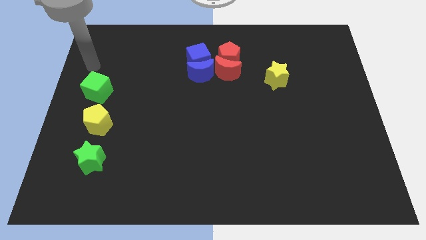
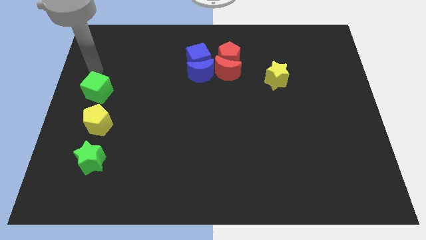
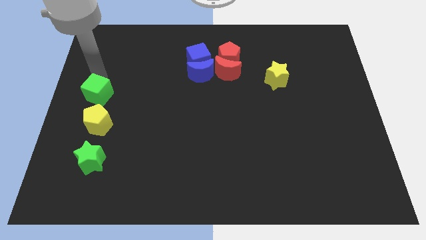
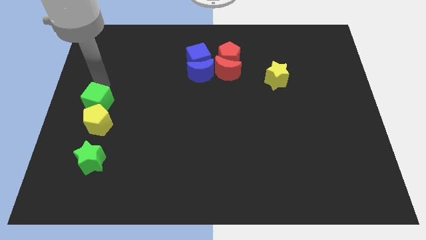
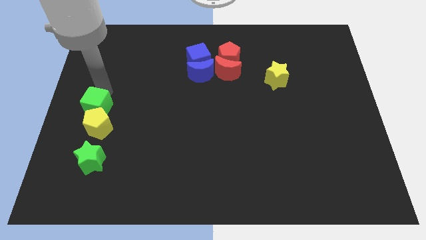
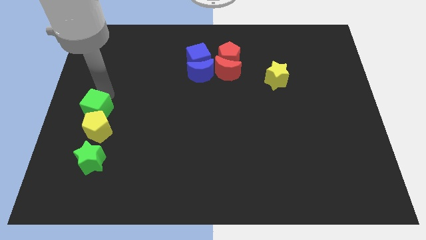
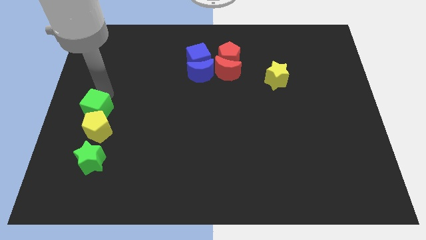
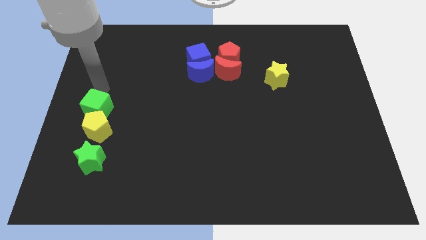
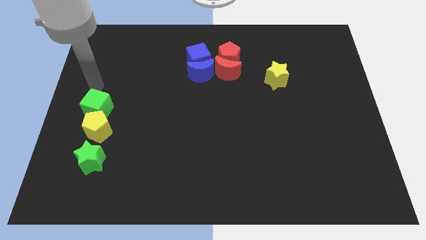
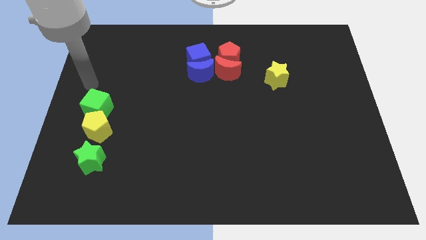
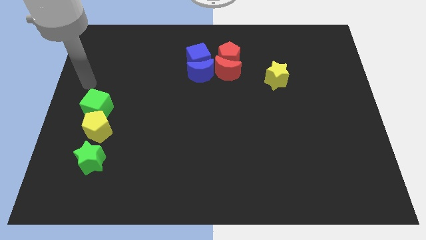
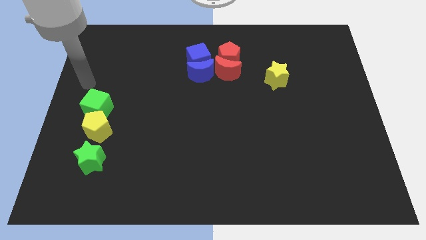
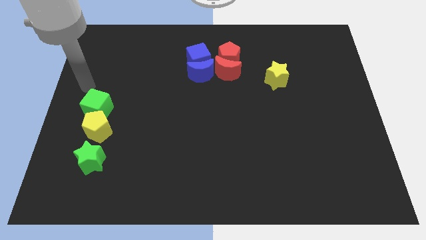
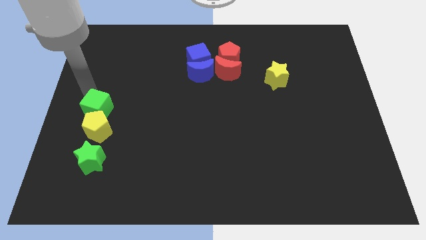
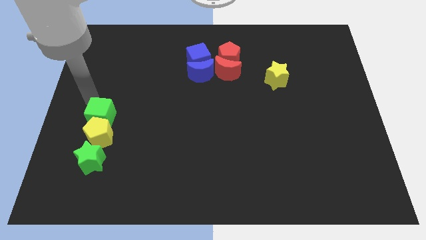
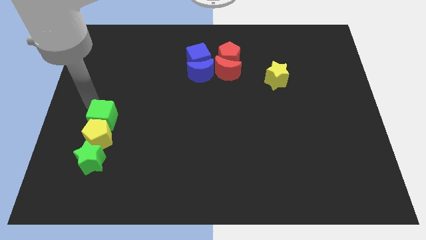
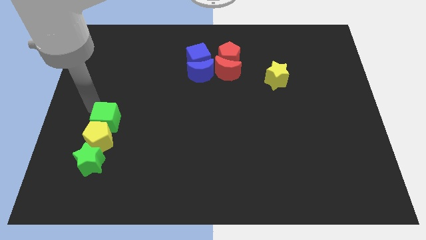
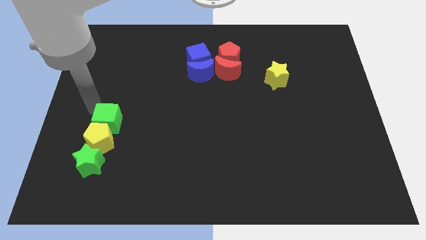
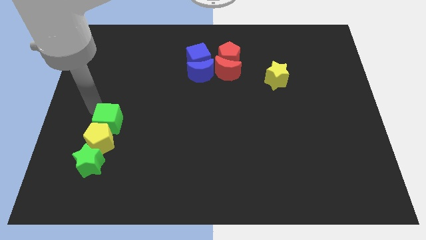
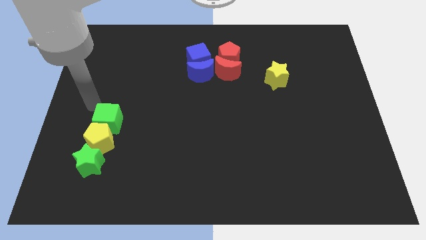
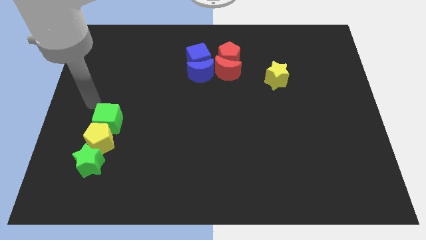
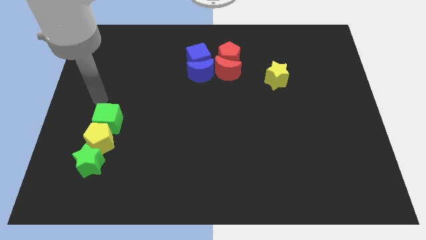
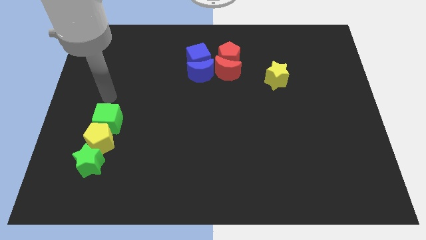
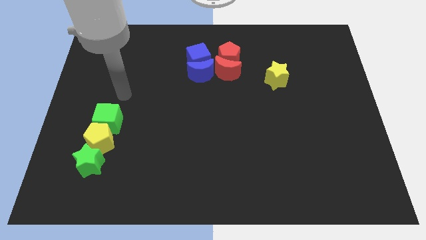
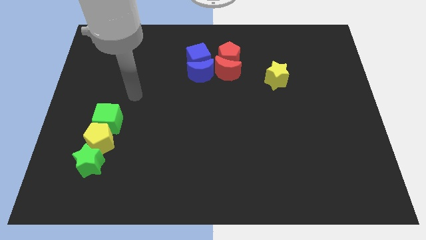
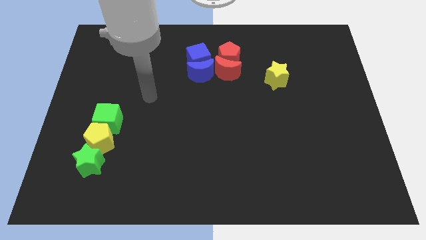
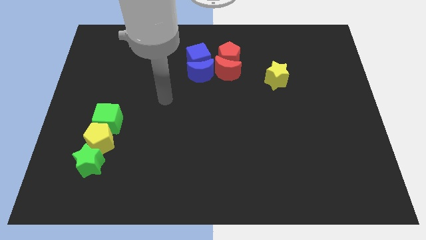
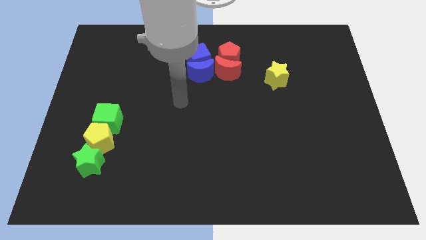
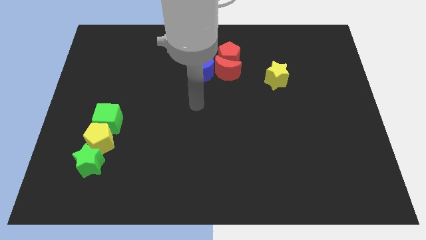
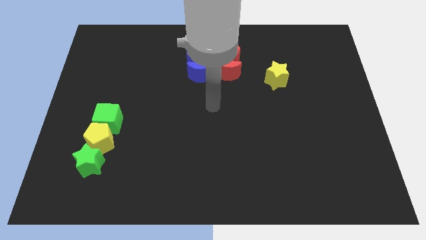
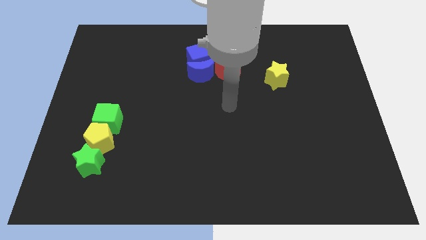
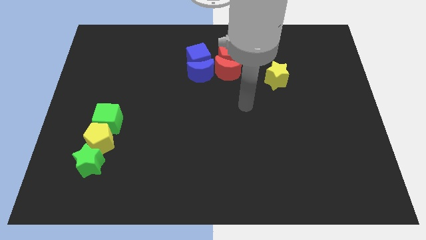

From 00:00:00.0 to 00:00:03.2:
push the green cube into yellow pentagon

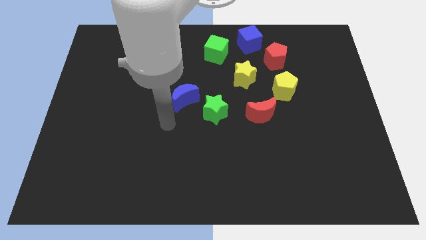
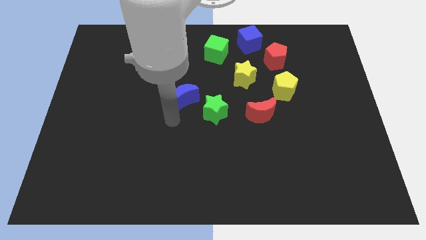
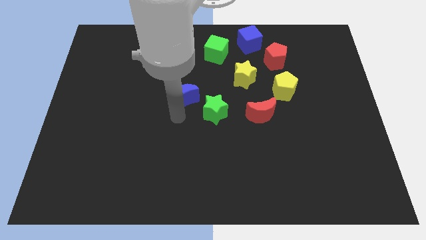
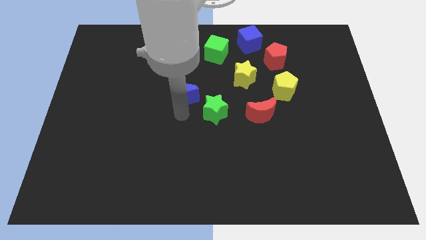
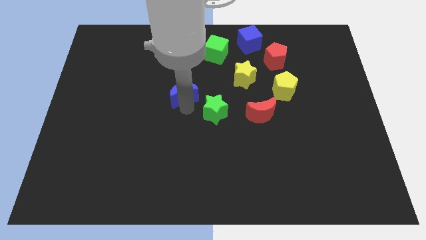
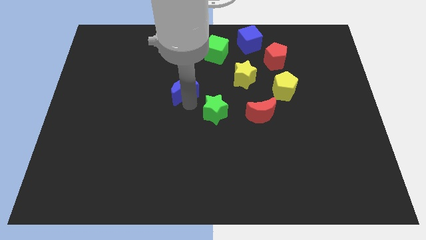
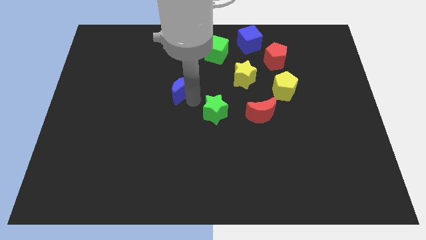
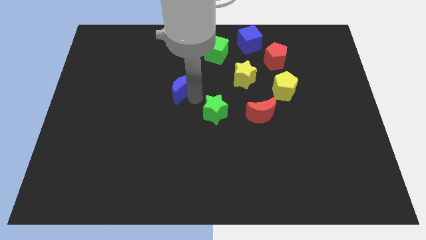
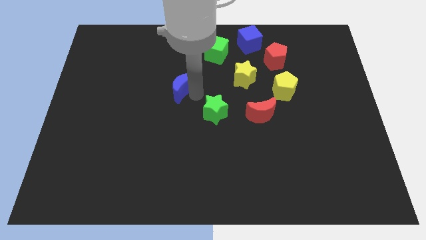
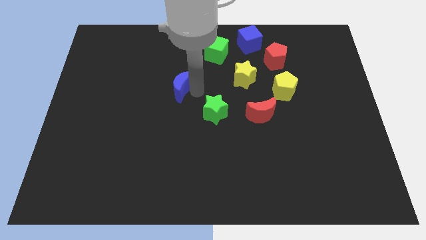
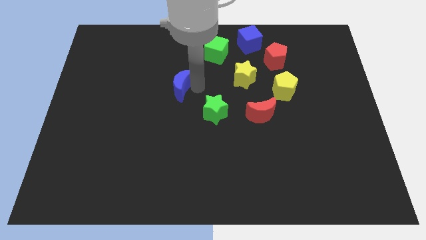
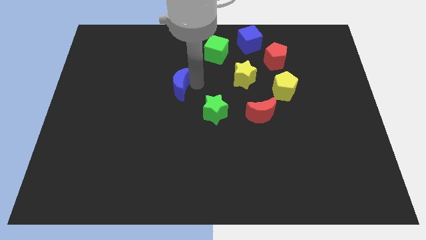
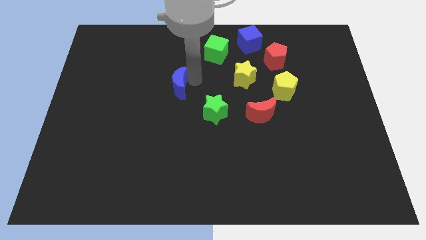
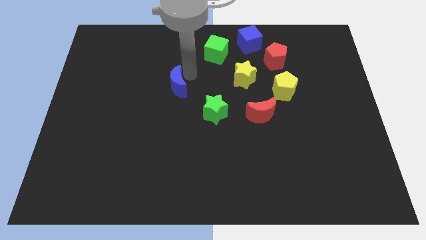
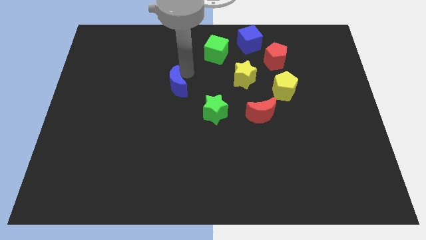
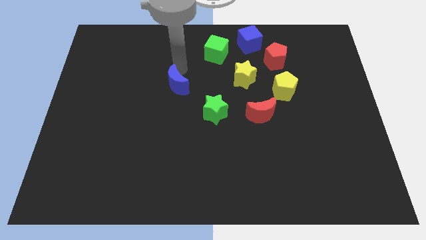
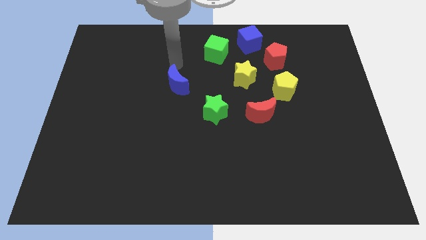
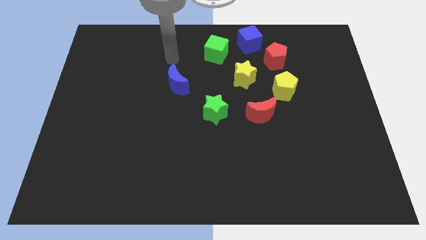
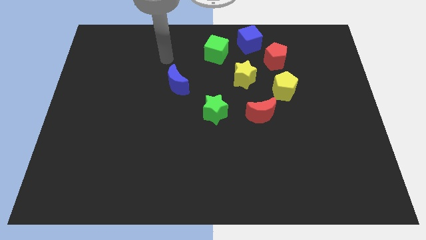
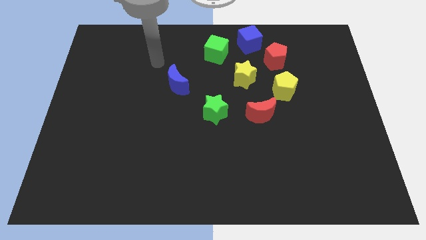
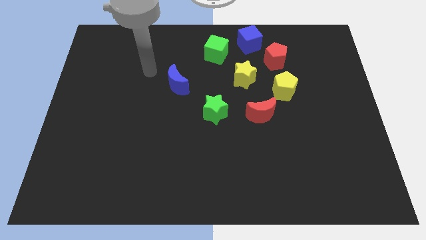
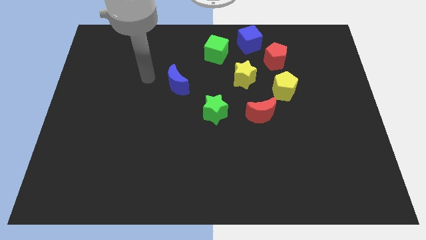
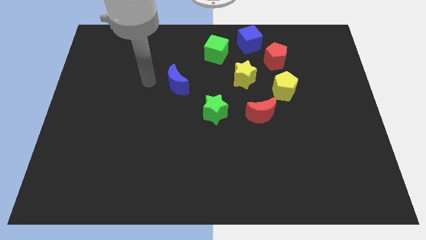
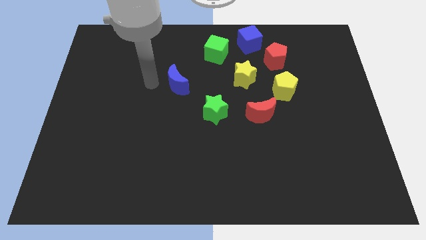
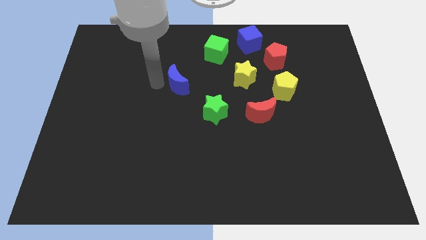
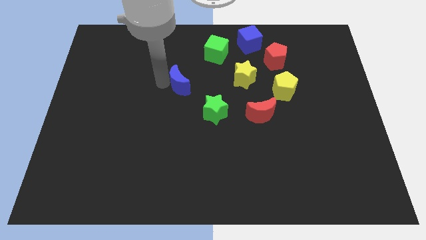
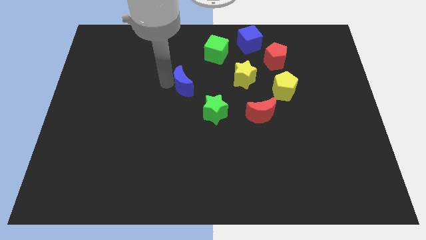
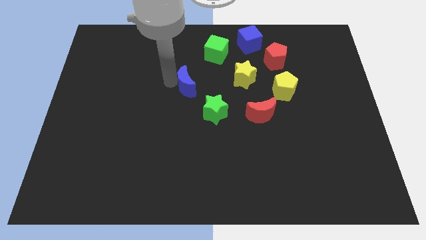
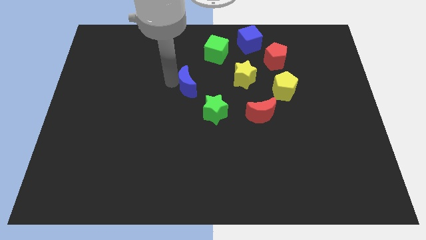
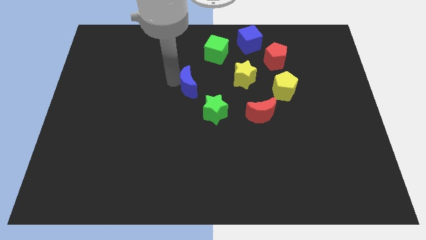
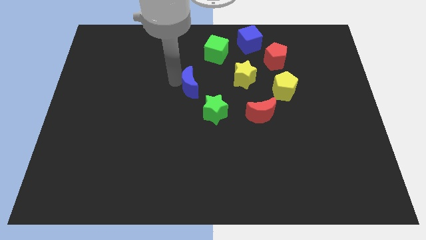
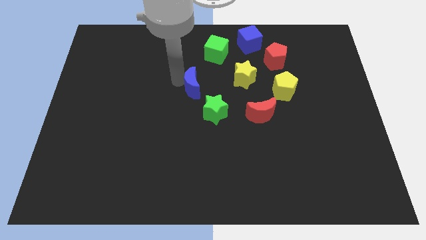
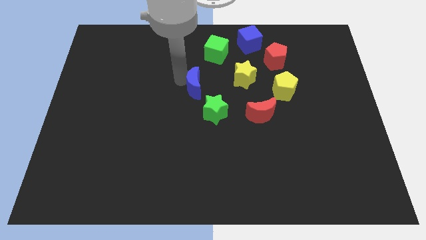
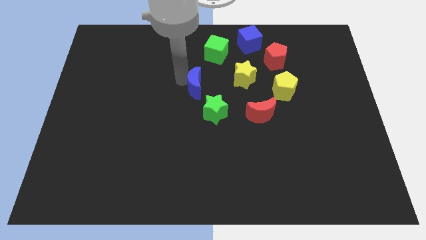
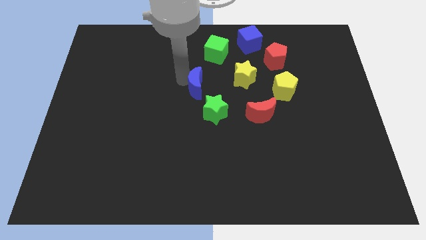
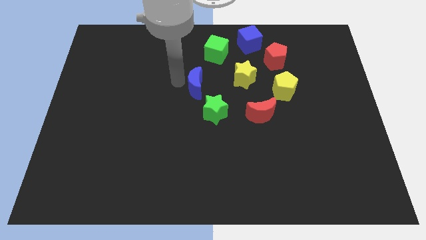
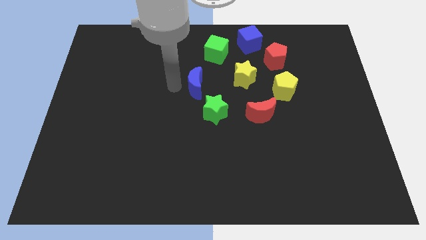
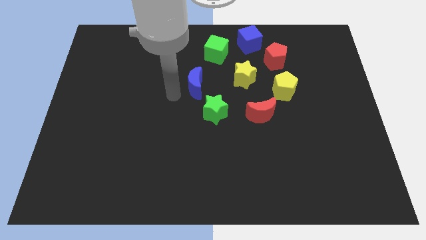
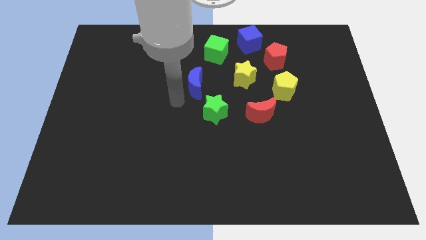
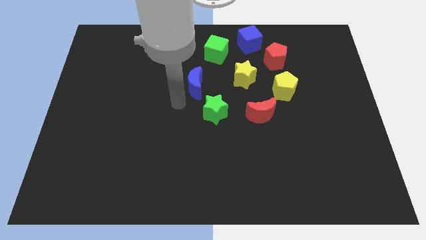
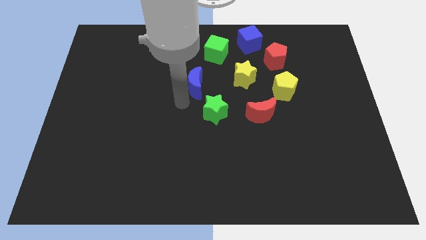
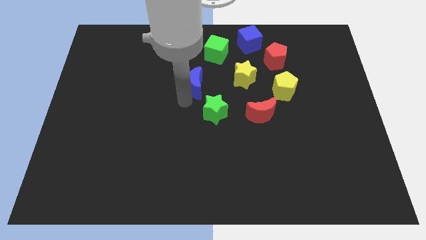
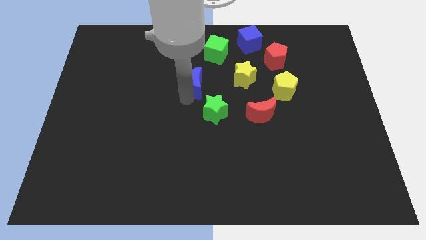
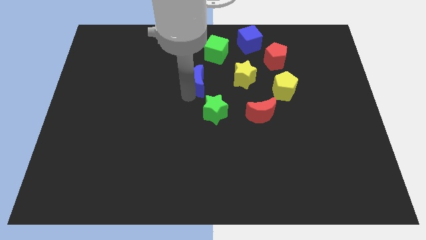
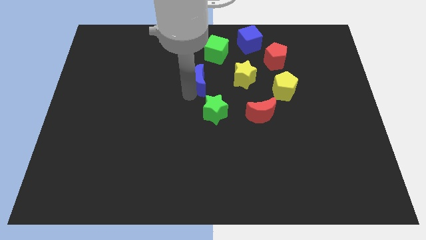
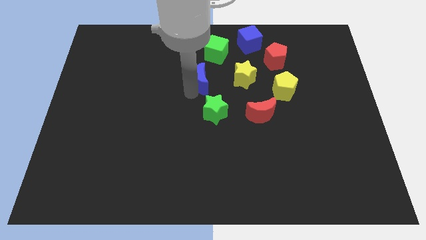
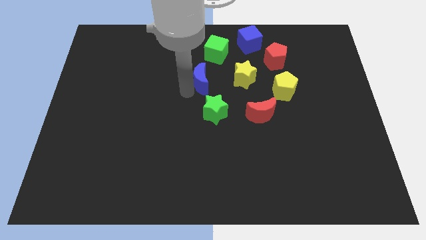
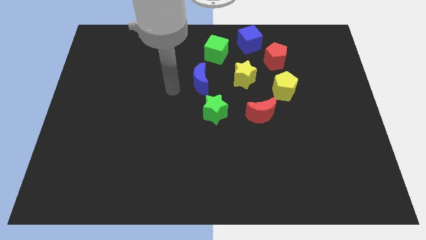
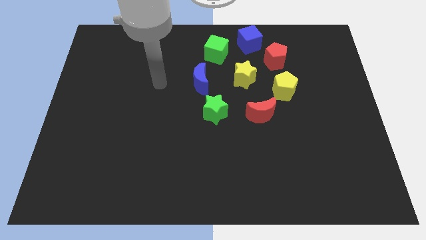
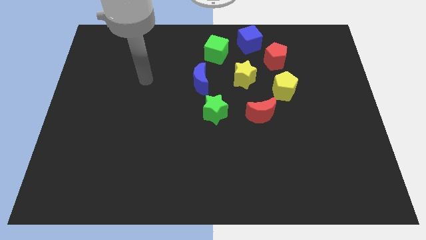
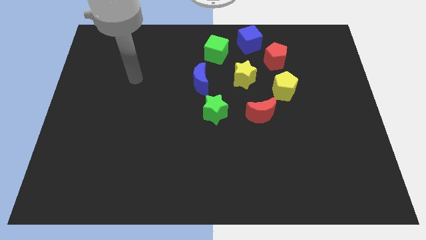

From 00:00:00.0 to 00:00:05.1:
push the blue moon to the left of the yellow star

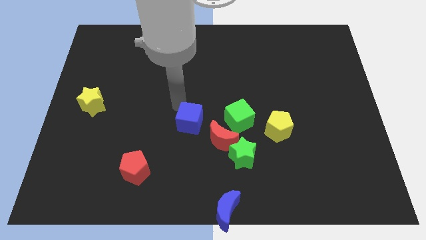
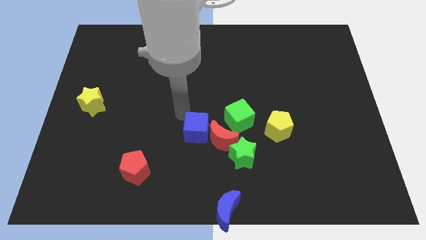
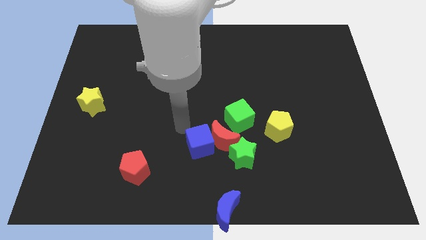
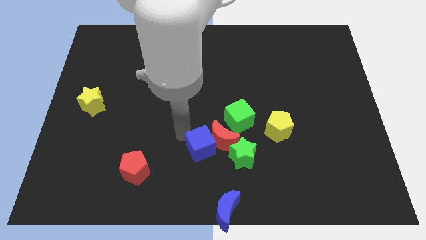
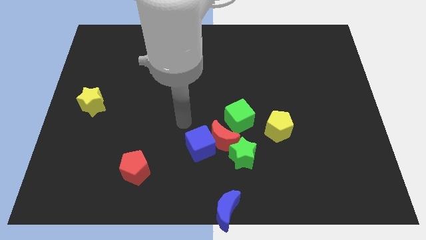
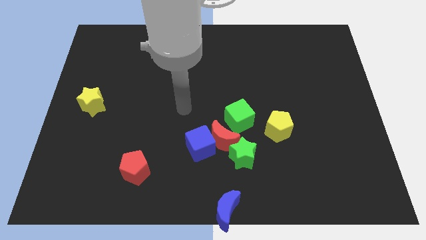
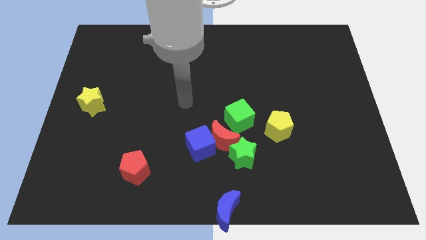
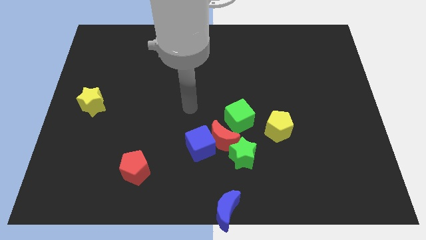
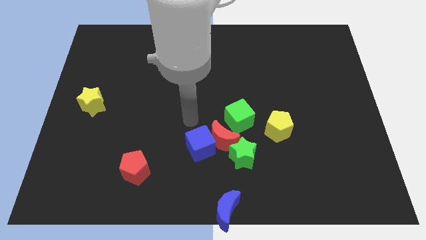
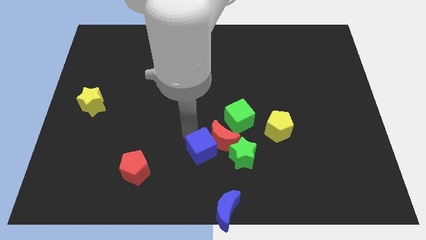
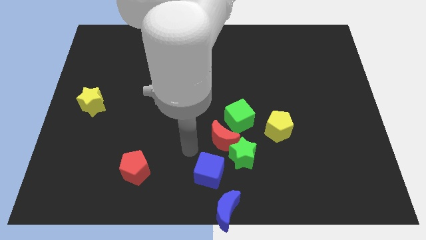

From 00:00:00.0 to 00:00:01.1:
move blue cube towards blue moon
